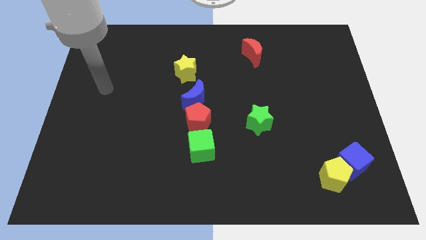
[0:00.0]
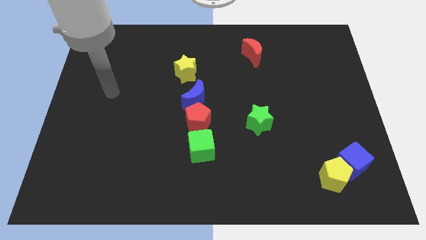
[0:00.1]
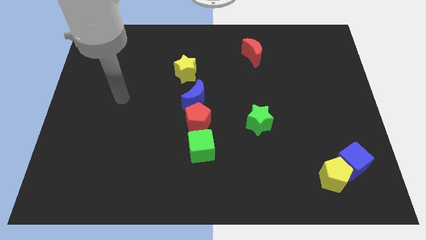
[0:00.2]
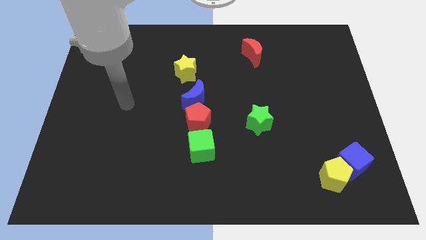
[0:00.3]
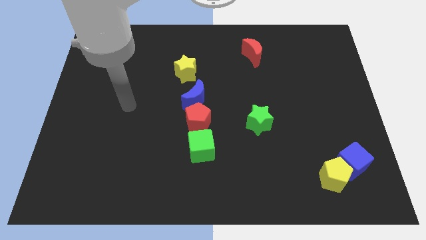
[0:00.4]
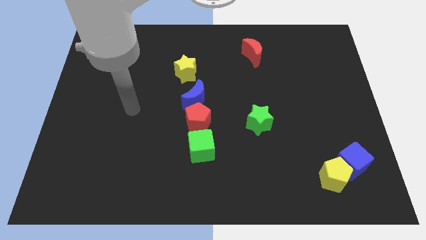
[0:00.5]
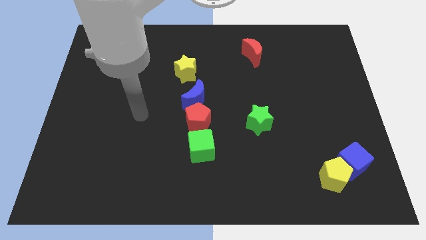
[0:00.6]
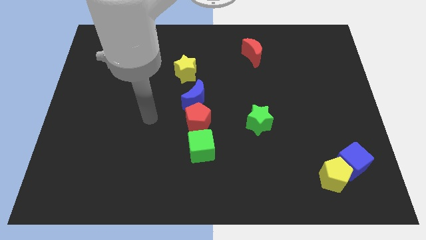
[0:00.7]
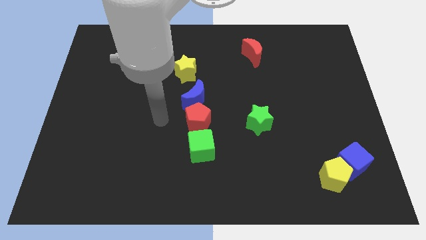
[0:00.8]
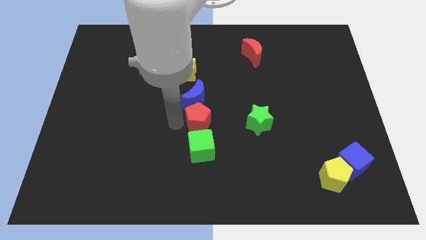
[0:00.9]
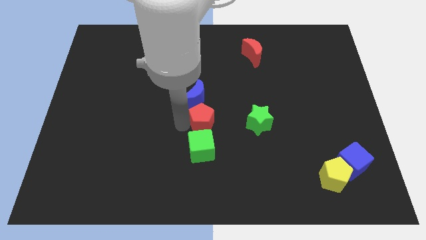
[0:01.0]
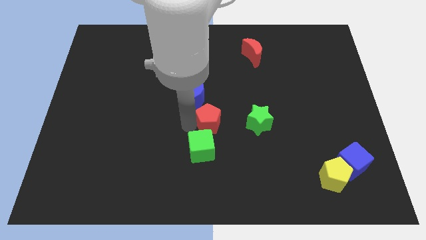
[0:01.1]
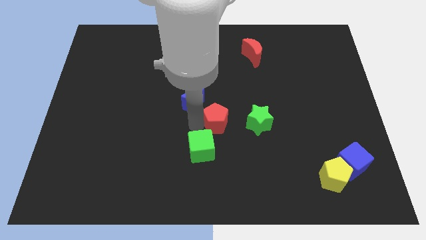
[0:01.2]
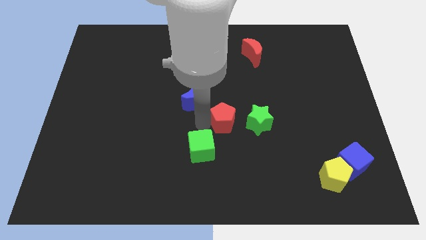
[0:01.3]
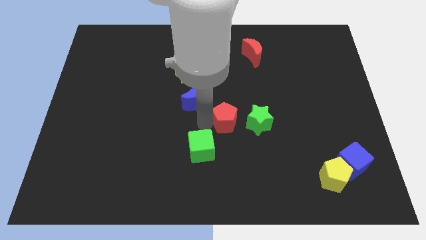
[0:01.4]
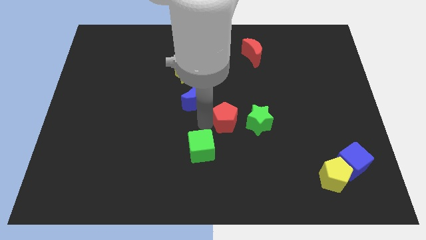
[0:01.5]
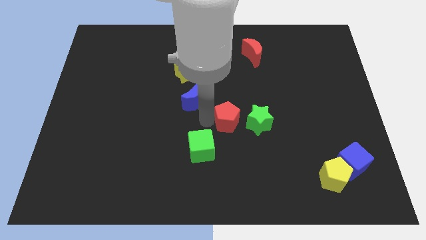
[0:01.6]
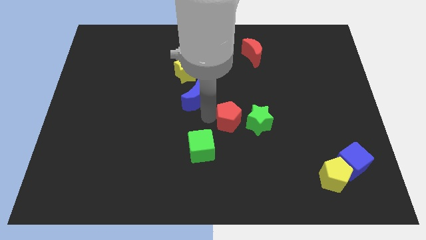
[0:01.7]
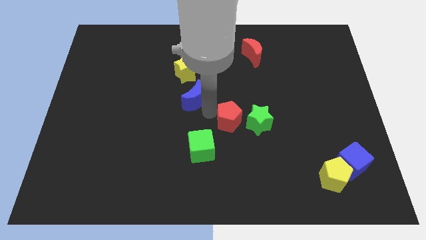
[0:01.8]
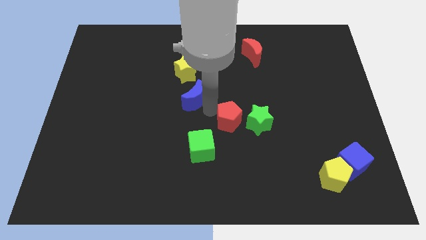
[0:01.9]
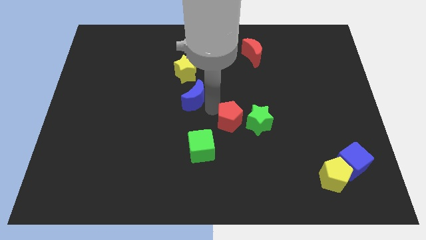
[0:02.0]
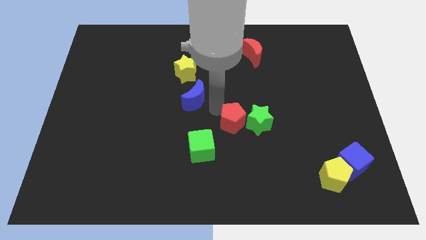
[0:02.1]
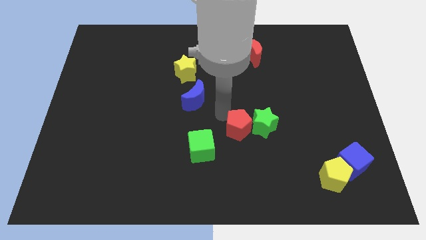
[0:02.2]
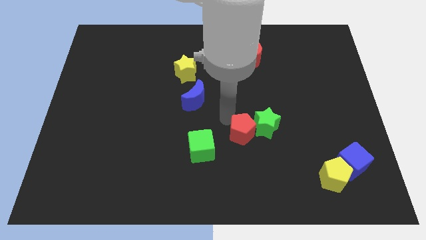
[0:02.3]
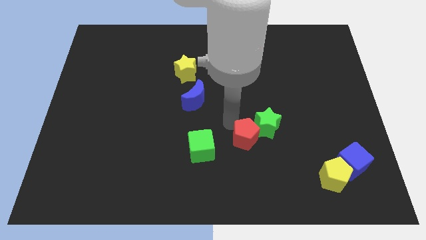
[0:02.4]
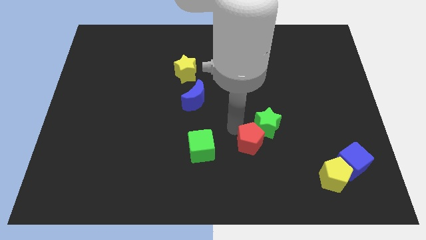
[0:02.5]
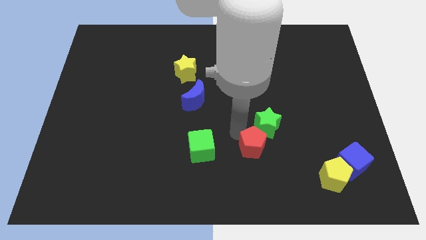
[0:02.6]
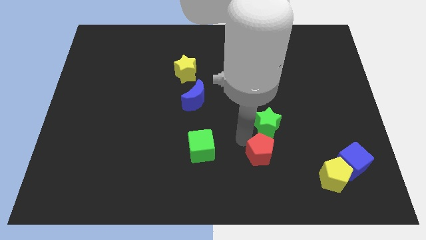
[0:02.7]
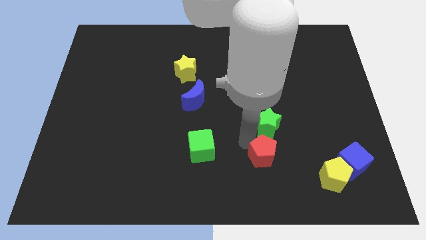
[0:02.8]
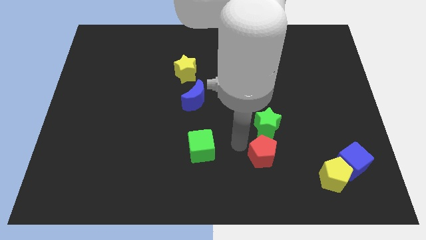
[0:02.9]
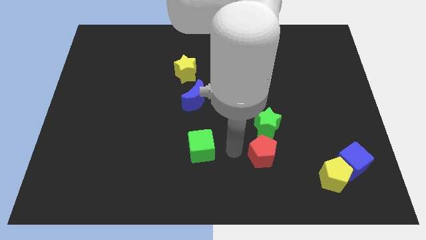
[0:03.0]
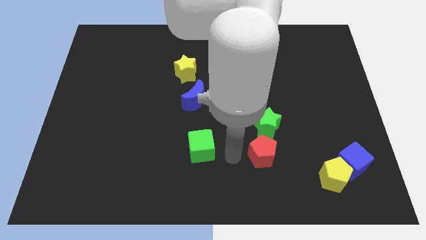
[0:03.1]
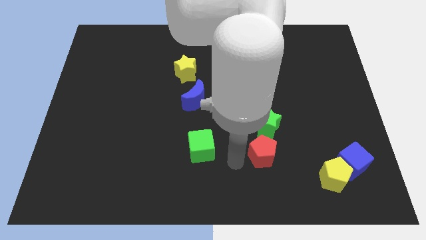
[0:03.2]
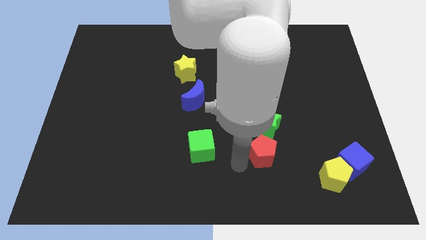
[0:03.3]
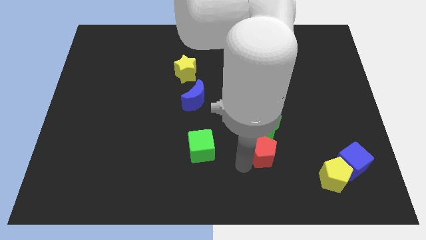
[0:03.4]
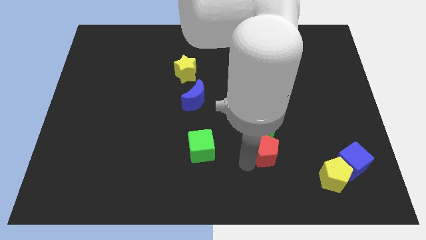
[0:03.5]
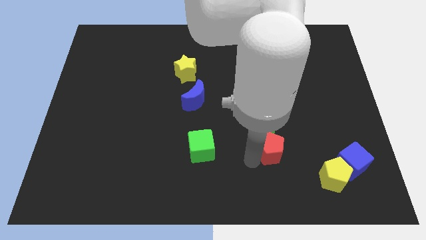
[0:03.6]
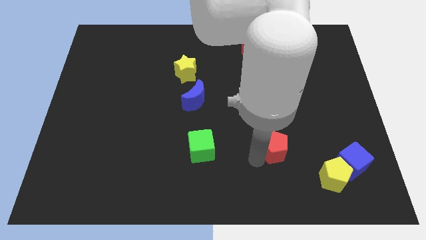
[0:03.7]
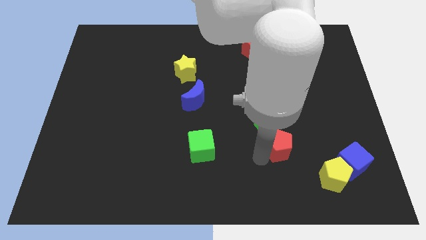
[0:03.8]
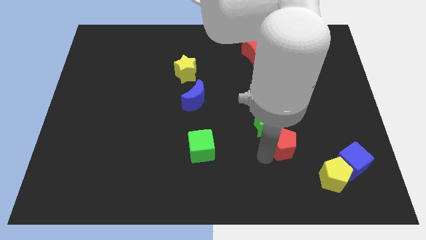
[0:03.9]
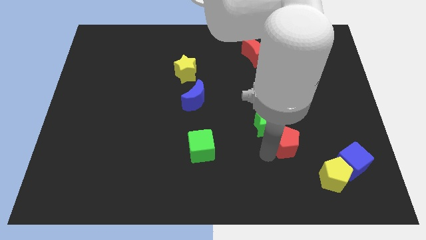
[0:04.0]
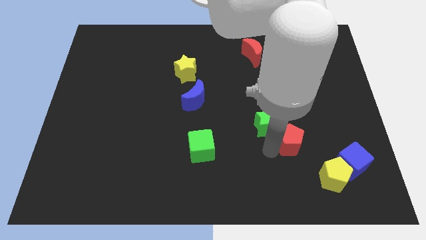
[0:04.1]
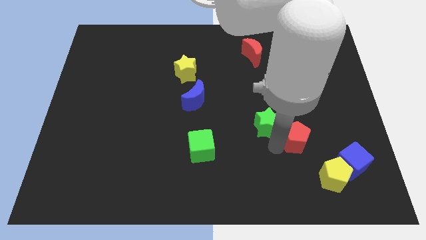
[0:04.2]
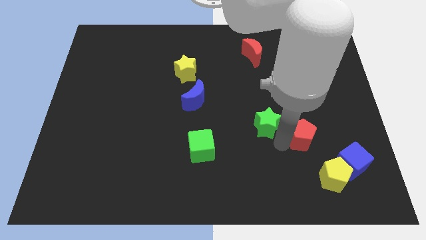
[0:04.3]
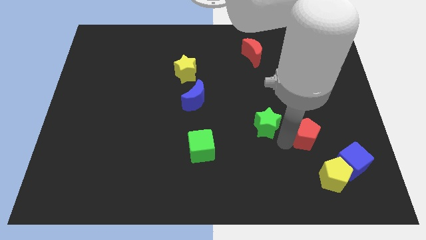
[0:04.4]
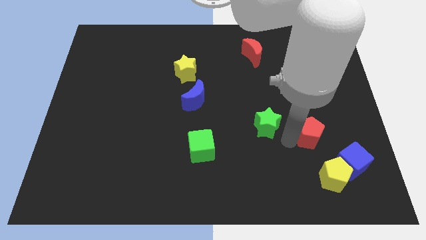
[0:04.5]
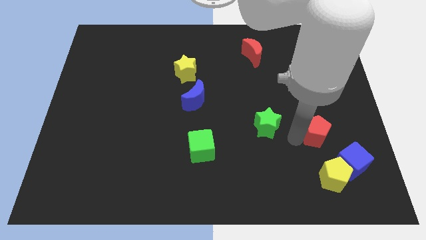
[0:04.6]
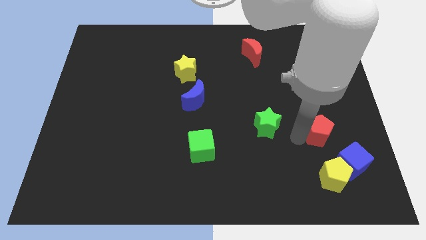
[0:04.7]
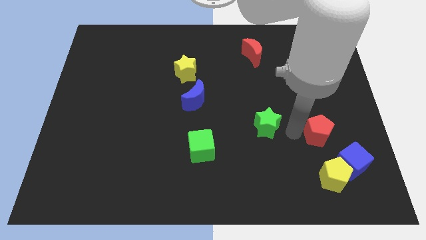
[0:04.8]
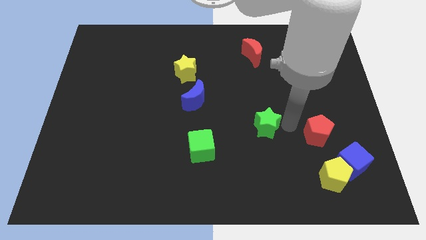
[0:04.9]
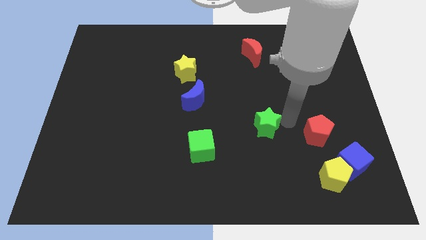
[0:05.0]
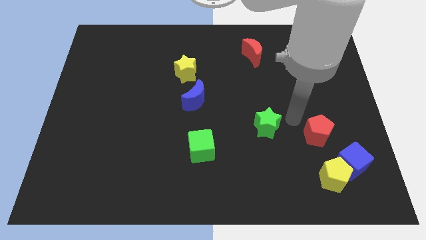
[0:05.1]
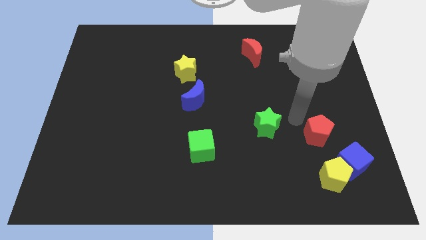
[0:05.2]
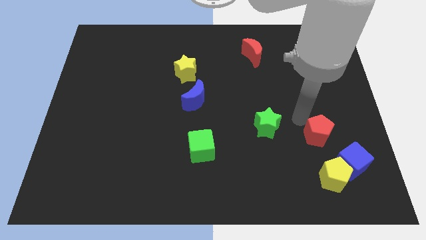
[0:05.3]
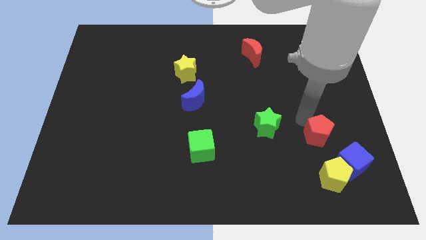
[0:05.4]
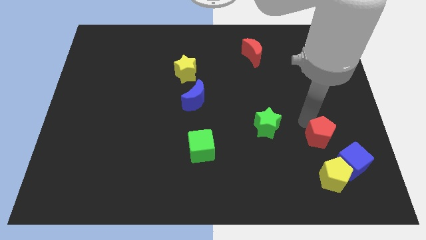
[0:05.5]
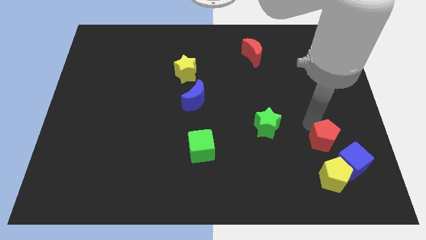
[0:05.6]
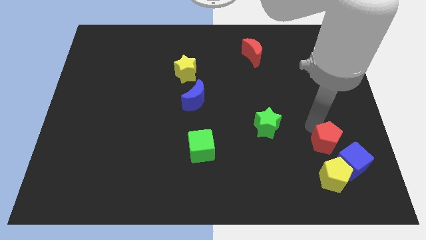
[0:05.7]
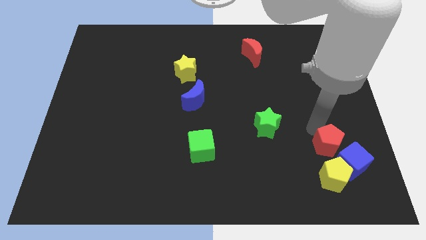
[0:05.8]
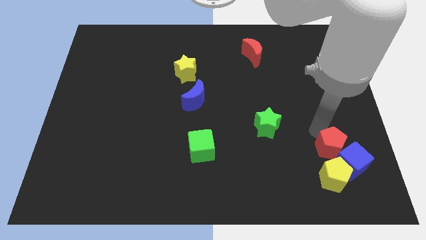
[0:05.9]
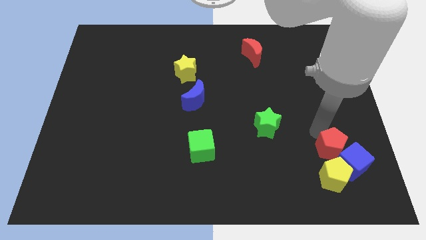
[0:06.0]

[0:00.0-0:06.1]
push the red pentagon to the blue cube

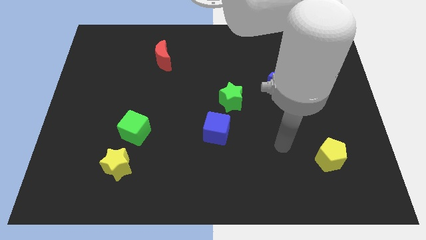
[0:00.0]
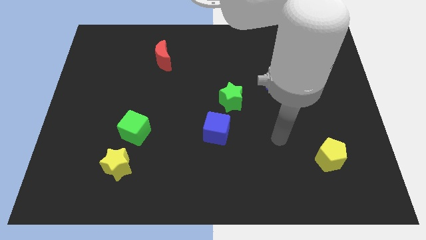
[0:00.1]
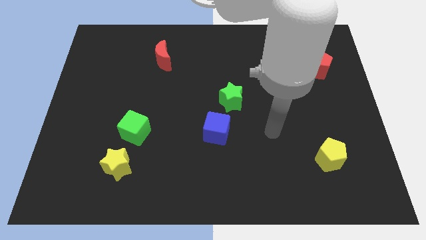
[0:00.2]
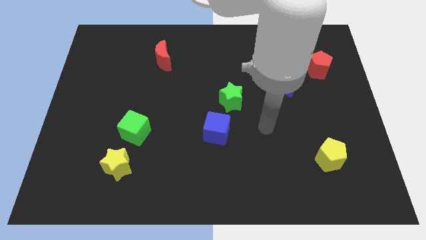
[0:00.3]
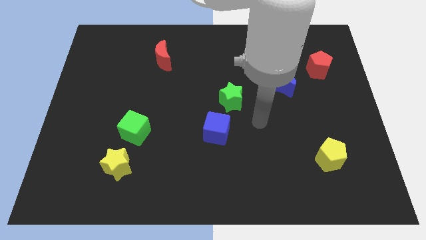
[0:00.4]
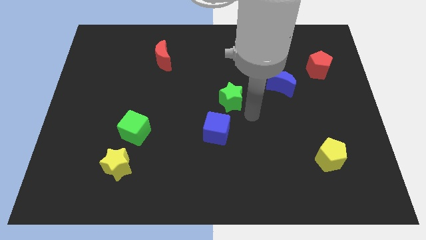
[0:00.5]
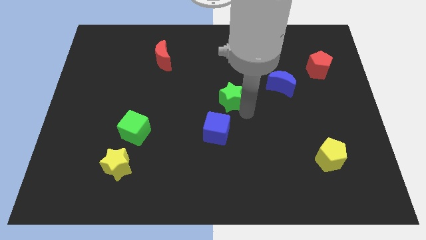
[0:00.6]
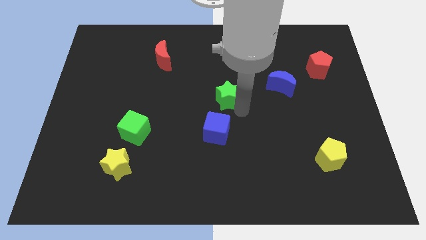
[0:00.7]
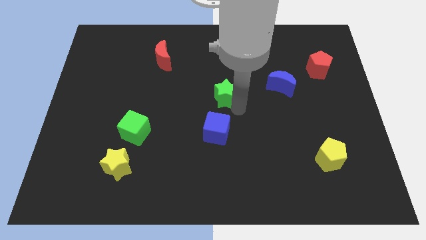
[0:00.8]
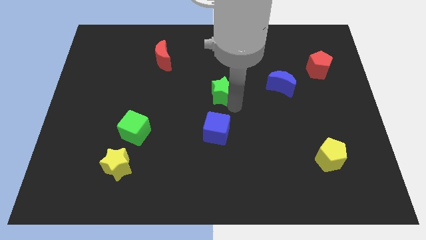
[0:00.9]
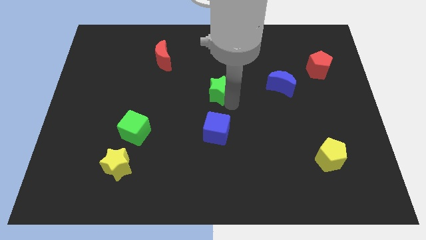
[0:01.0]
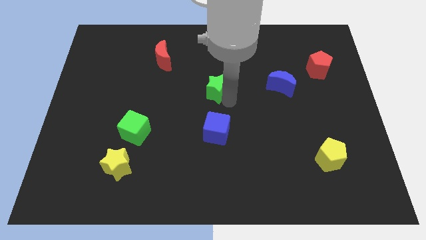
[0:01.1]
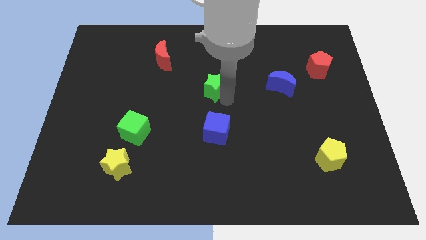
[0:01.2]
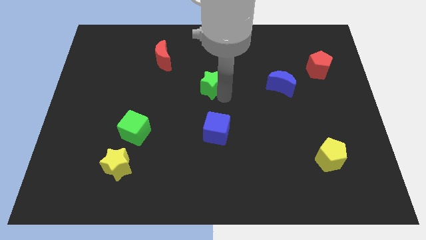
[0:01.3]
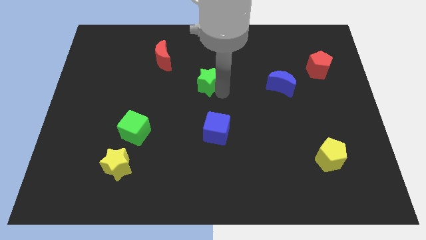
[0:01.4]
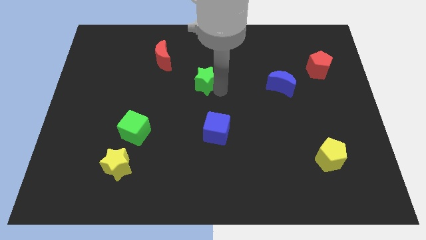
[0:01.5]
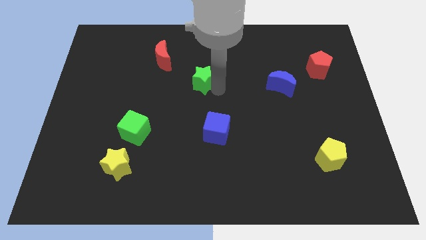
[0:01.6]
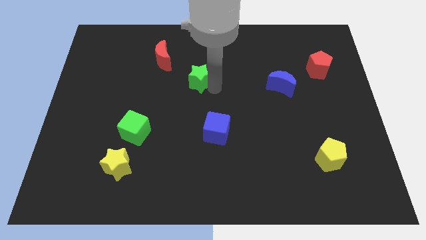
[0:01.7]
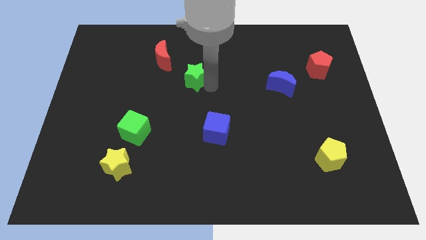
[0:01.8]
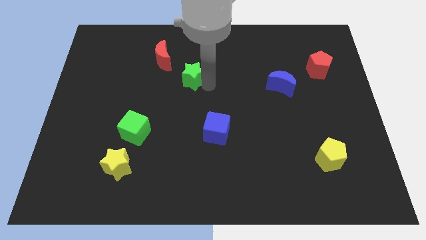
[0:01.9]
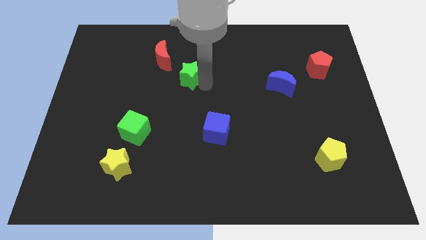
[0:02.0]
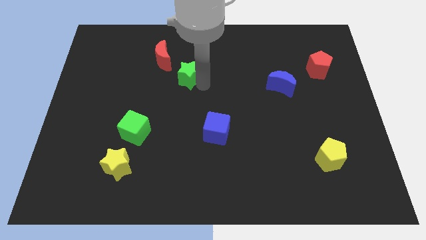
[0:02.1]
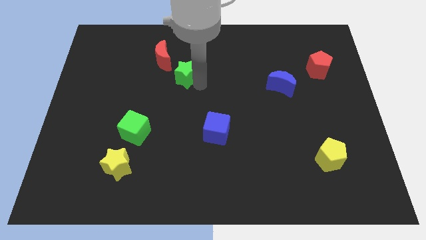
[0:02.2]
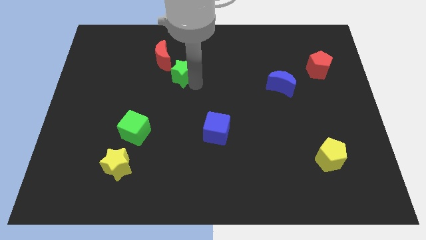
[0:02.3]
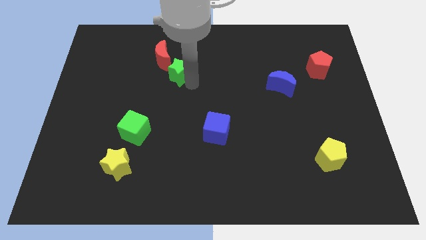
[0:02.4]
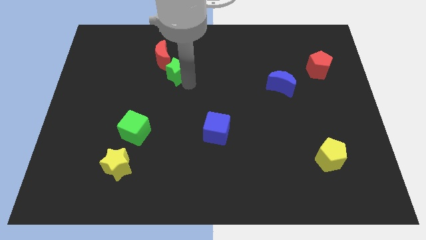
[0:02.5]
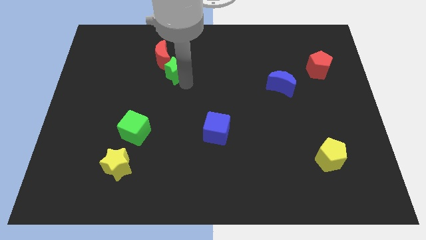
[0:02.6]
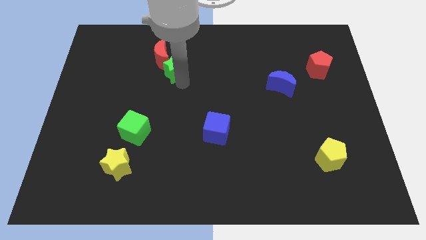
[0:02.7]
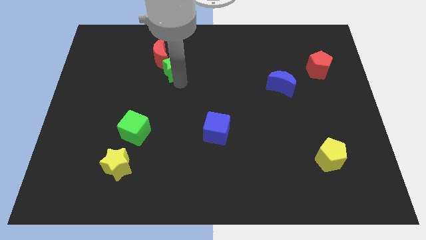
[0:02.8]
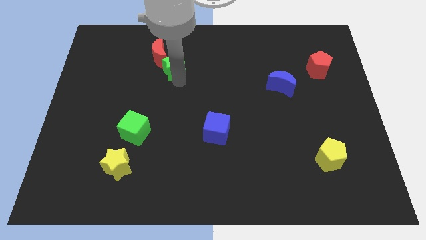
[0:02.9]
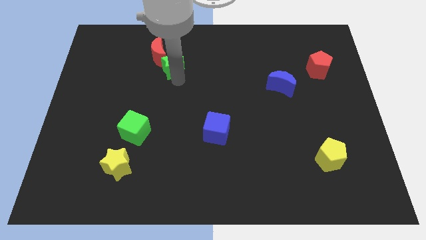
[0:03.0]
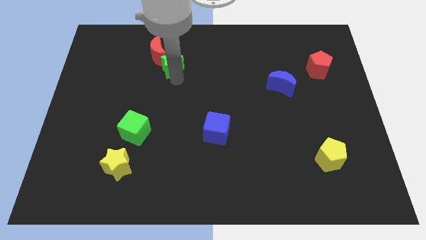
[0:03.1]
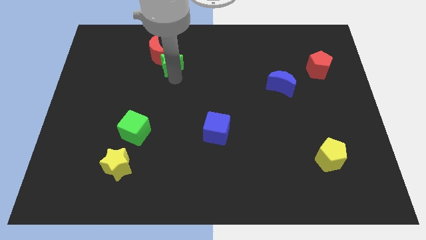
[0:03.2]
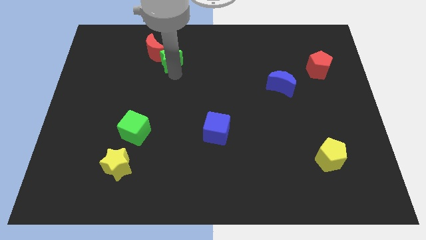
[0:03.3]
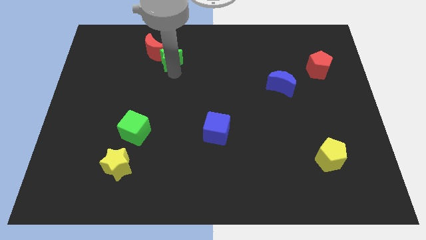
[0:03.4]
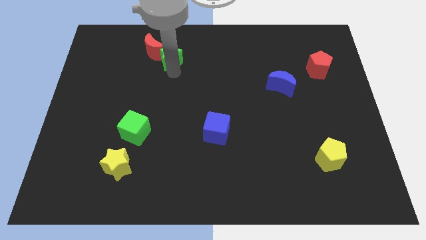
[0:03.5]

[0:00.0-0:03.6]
slide the green star close to the red moon
